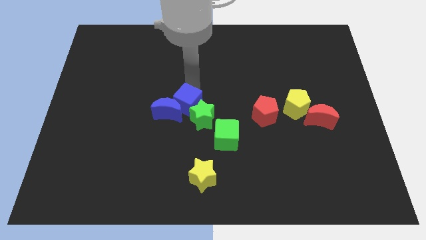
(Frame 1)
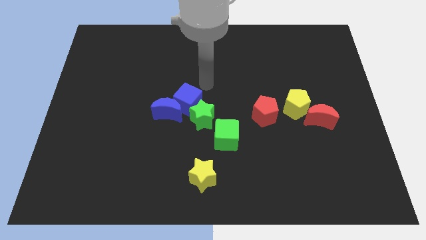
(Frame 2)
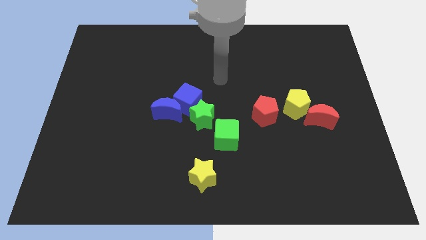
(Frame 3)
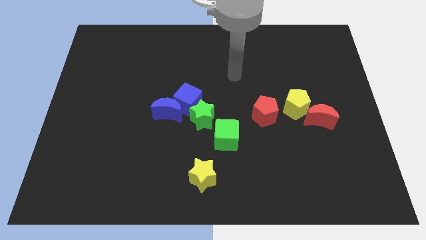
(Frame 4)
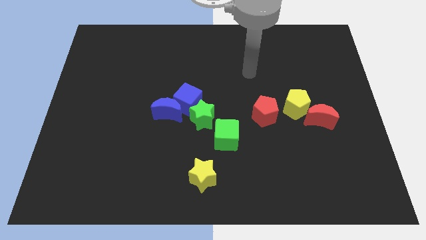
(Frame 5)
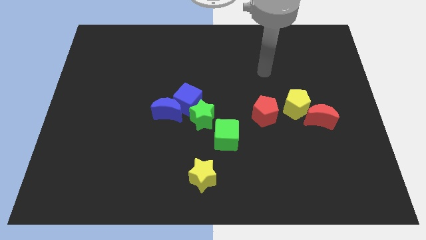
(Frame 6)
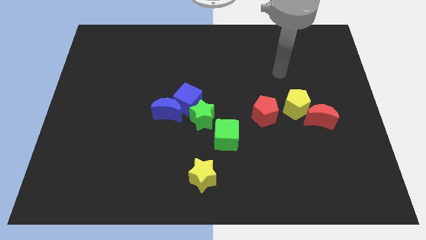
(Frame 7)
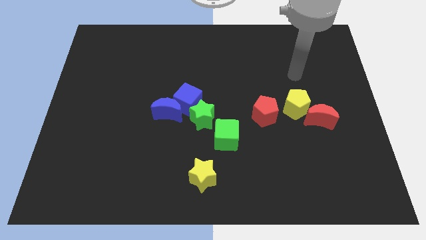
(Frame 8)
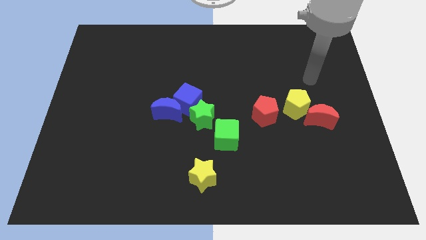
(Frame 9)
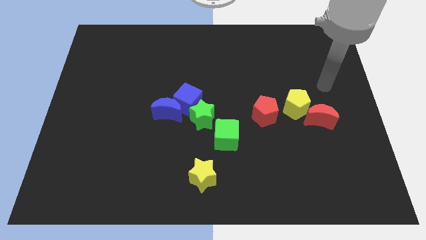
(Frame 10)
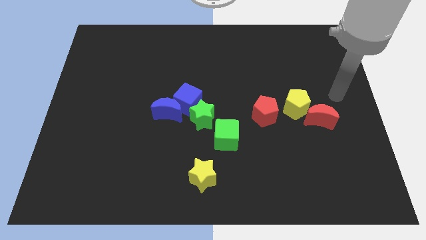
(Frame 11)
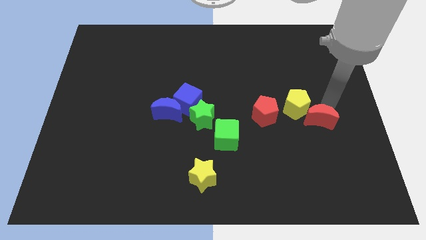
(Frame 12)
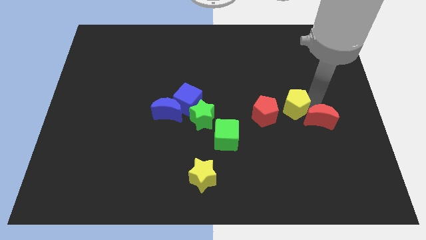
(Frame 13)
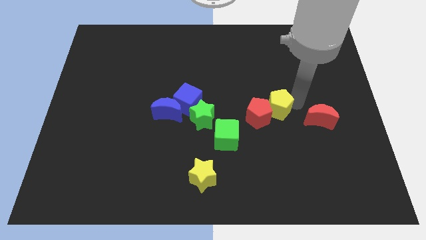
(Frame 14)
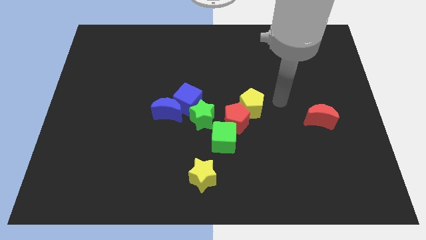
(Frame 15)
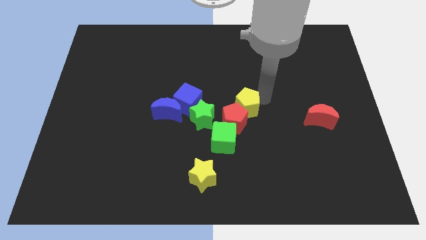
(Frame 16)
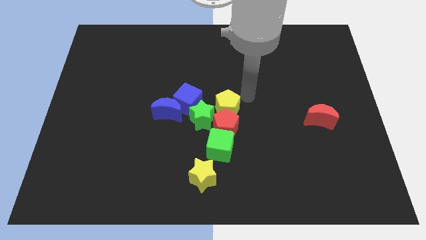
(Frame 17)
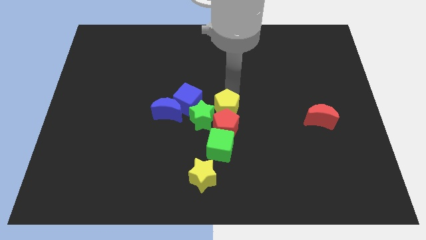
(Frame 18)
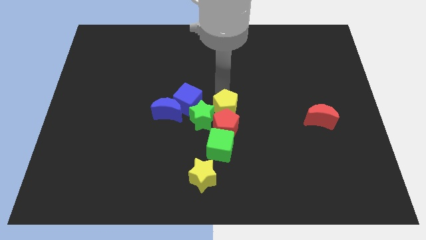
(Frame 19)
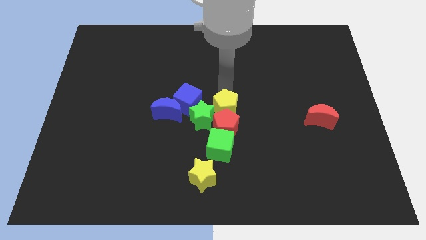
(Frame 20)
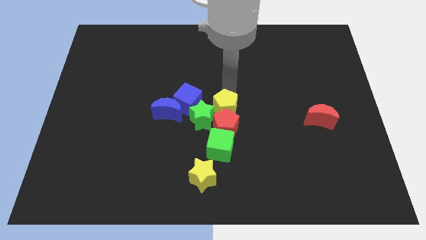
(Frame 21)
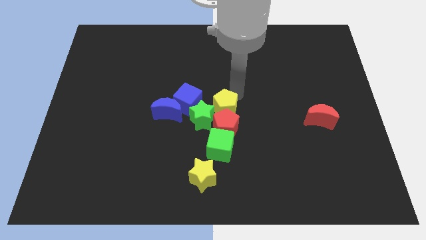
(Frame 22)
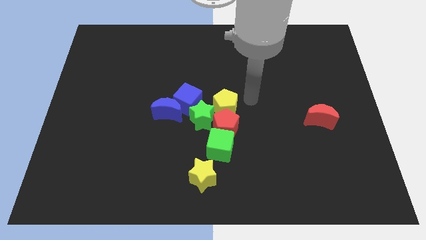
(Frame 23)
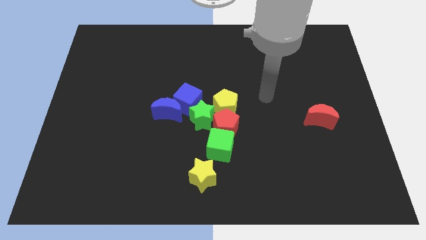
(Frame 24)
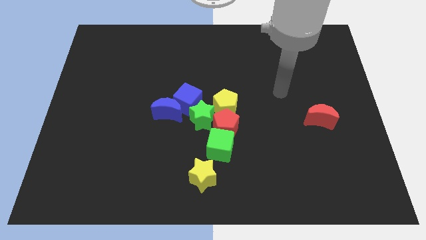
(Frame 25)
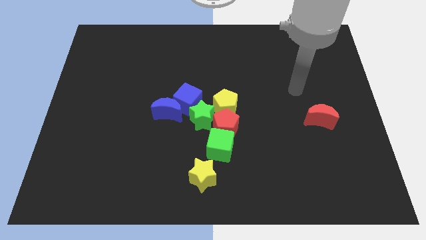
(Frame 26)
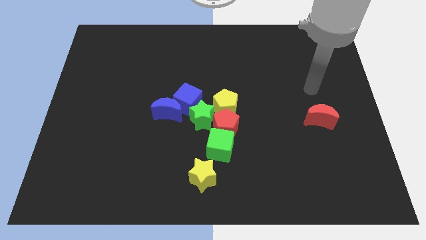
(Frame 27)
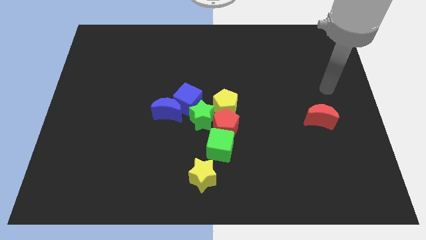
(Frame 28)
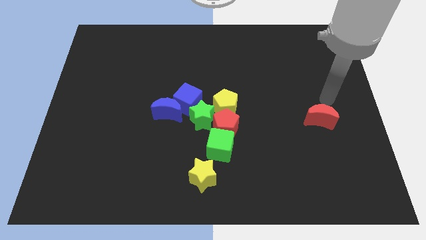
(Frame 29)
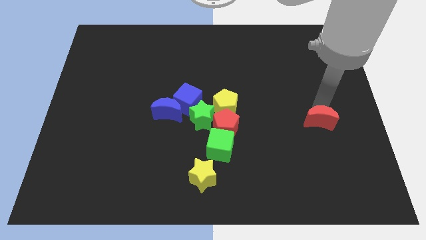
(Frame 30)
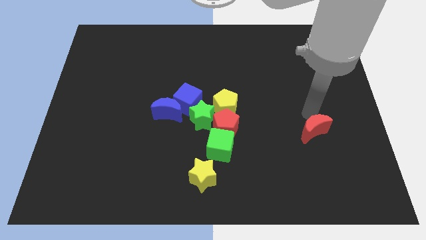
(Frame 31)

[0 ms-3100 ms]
push the green blocks red and yellow pentagon towards the center of the board

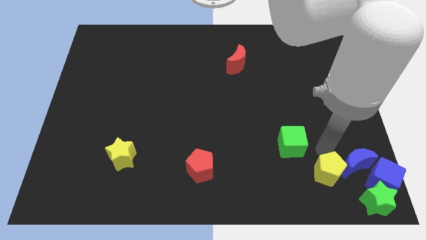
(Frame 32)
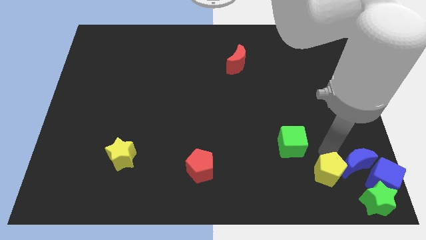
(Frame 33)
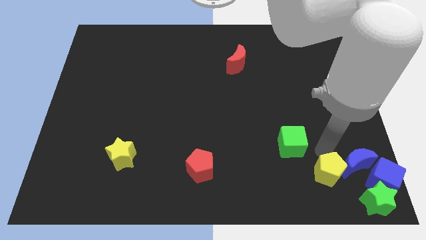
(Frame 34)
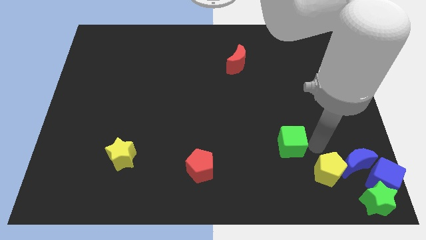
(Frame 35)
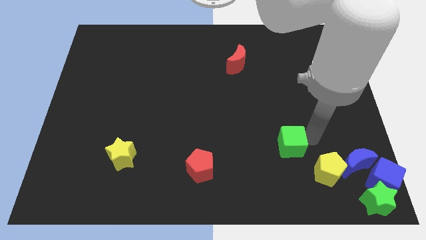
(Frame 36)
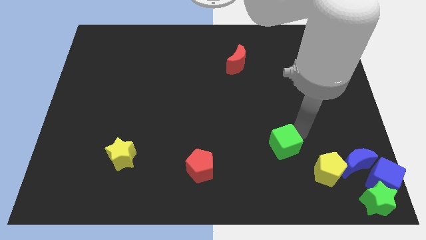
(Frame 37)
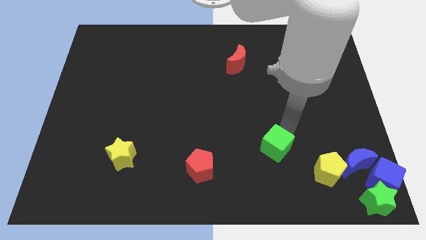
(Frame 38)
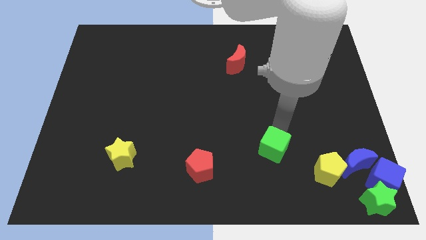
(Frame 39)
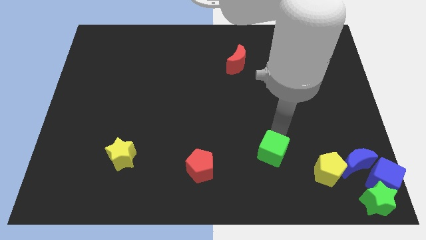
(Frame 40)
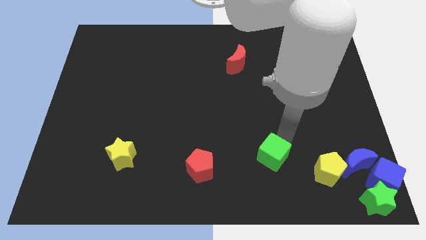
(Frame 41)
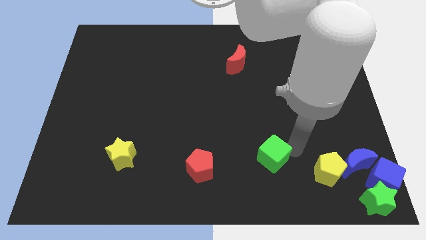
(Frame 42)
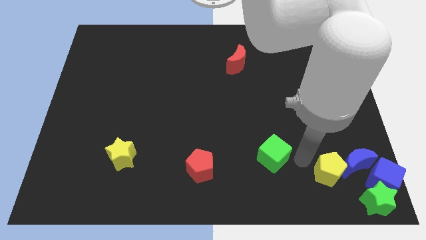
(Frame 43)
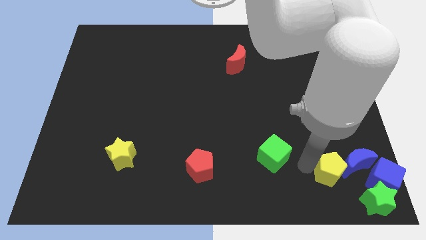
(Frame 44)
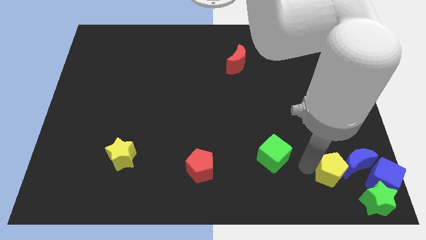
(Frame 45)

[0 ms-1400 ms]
slightly move the green cube towards the bottom center of the board

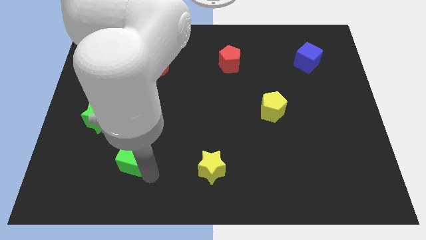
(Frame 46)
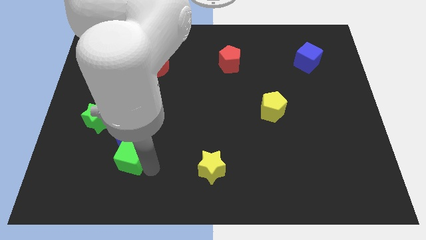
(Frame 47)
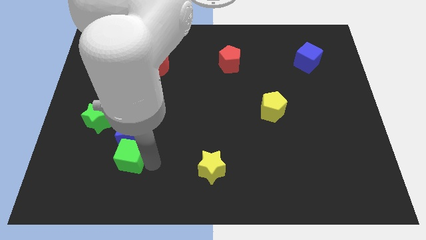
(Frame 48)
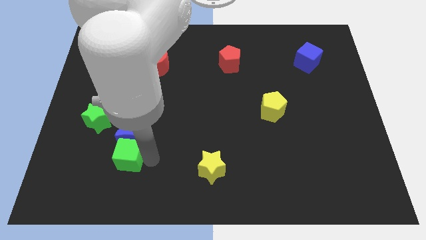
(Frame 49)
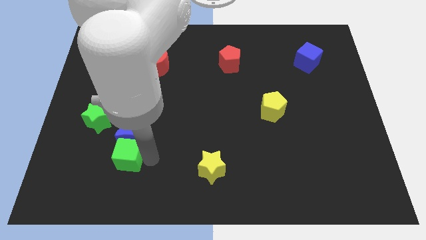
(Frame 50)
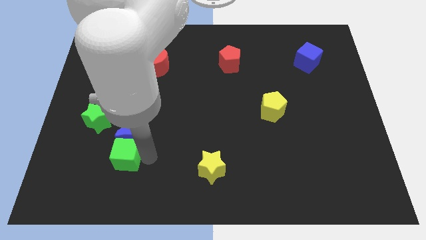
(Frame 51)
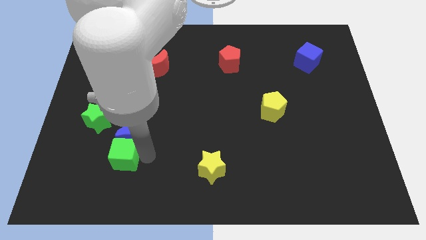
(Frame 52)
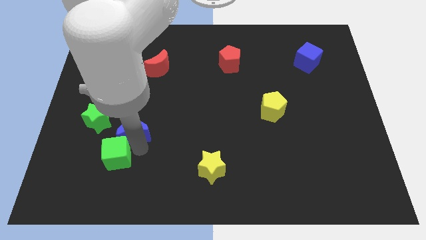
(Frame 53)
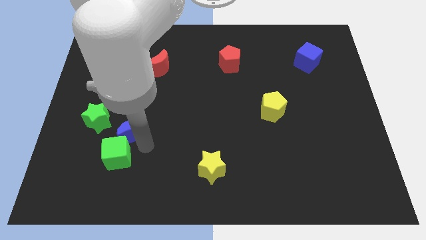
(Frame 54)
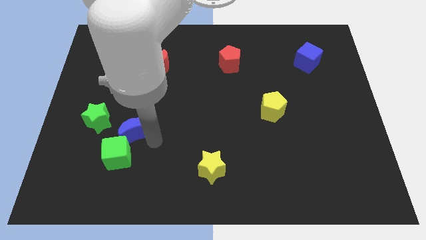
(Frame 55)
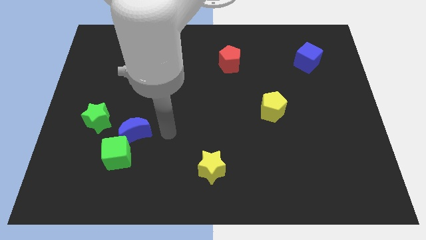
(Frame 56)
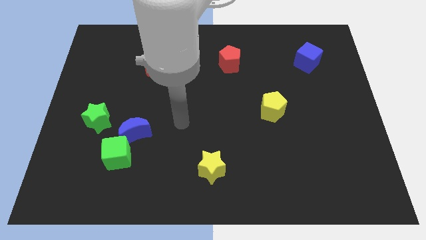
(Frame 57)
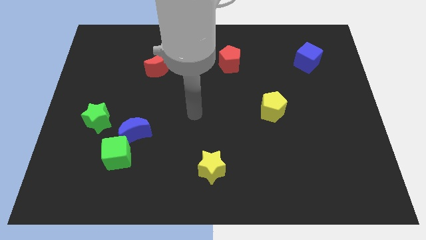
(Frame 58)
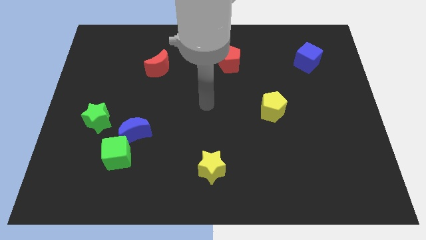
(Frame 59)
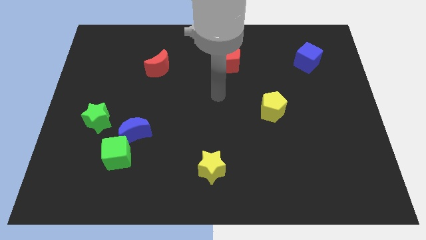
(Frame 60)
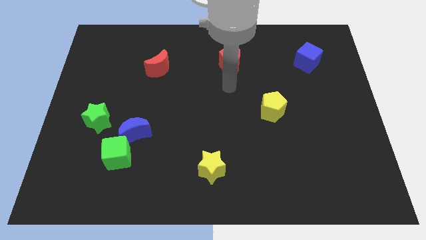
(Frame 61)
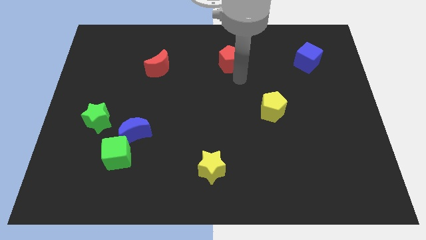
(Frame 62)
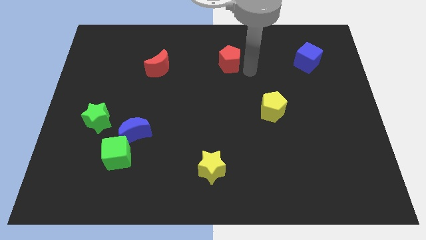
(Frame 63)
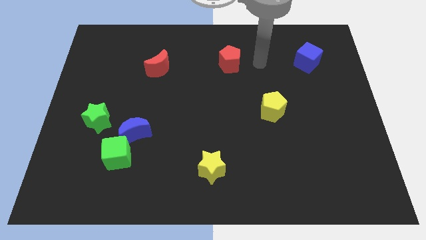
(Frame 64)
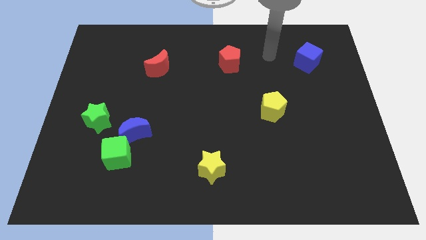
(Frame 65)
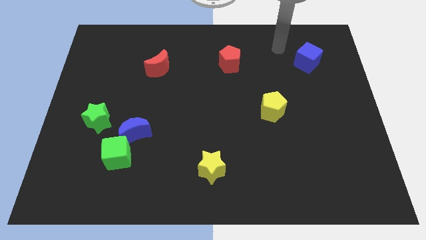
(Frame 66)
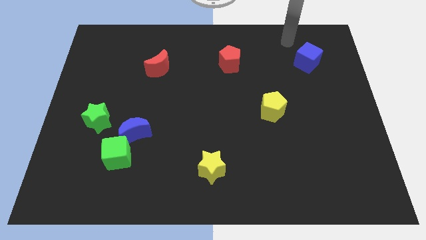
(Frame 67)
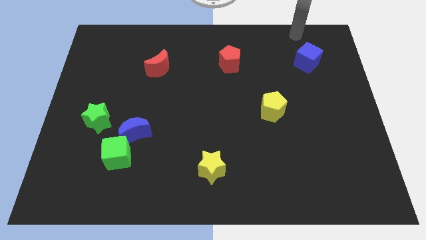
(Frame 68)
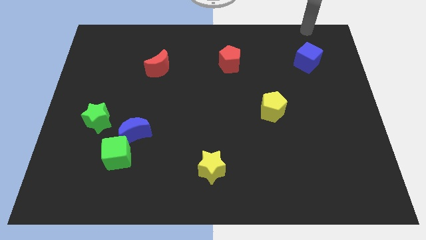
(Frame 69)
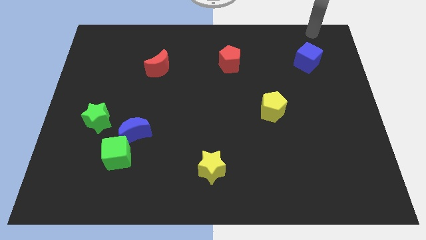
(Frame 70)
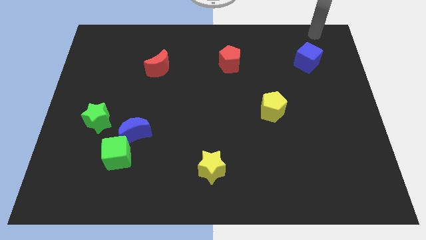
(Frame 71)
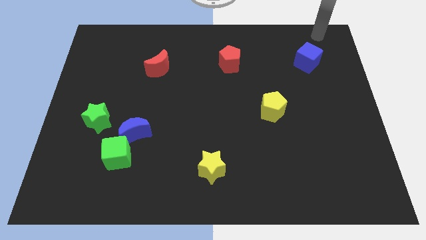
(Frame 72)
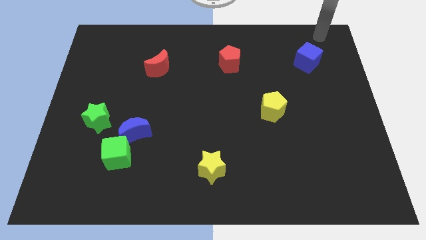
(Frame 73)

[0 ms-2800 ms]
place your hand at the top right corner

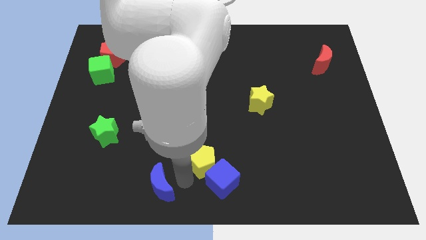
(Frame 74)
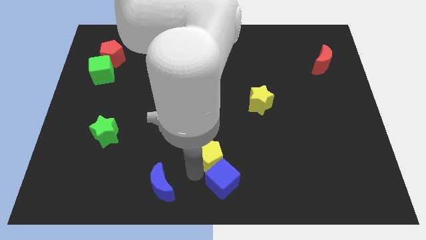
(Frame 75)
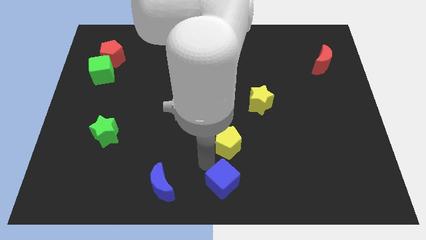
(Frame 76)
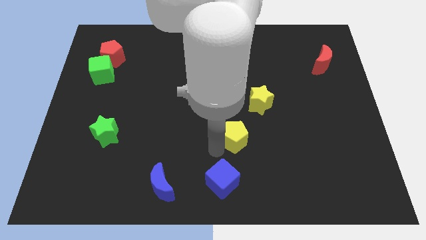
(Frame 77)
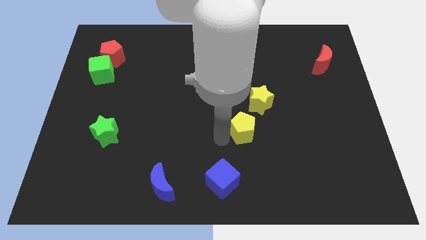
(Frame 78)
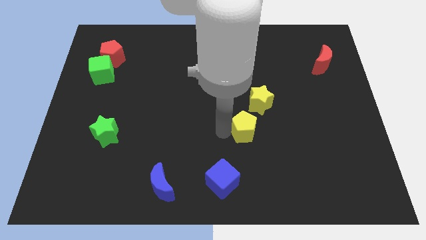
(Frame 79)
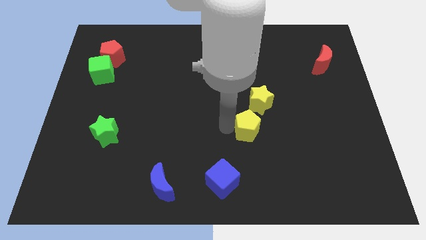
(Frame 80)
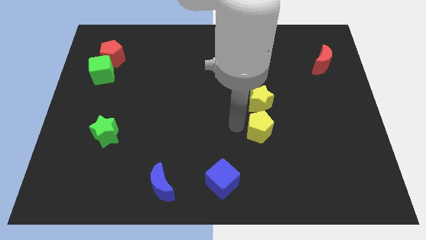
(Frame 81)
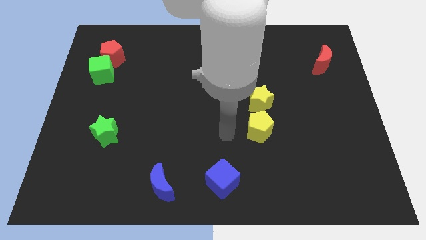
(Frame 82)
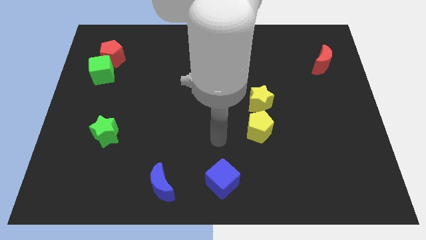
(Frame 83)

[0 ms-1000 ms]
move the yellow pentagon away from the blue cube

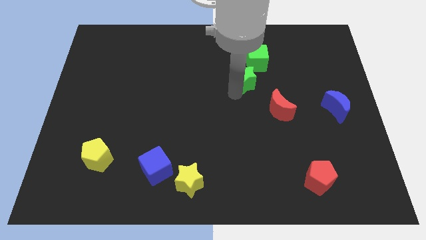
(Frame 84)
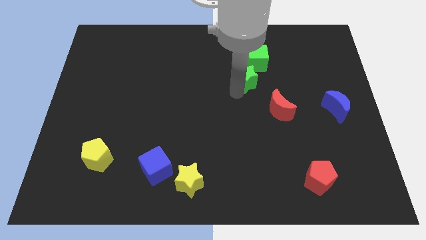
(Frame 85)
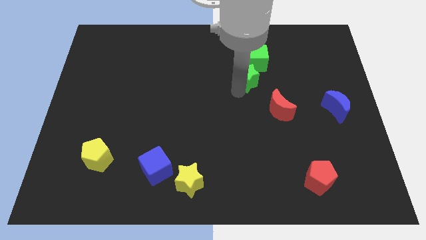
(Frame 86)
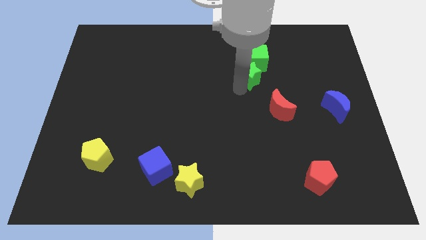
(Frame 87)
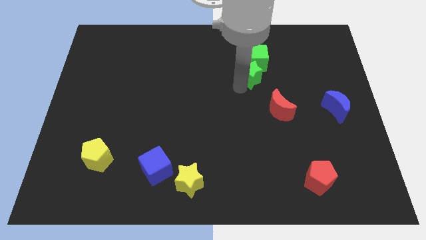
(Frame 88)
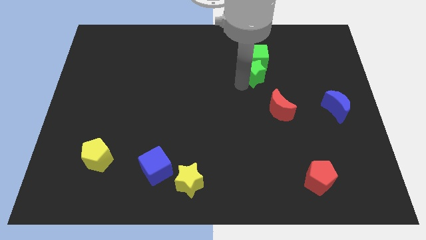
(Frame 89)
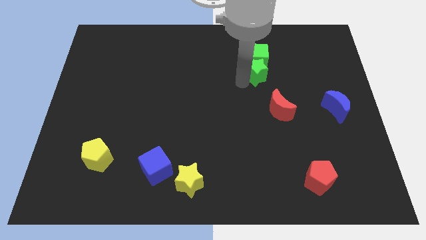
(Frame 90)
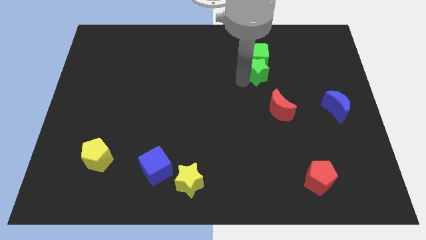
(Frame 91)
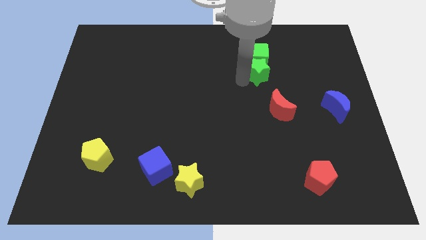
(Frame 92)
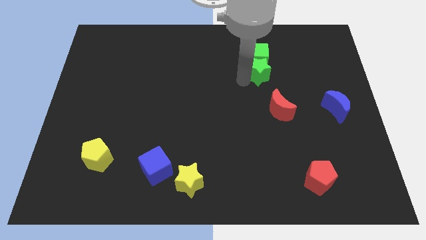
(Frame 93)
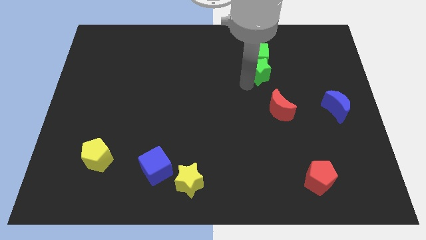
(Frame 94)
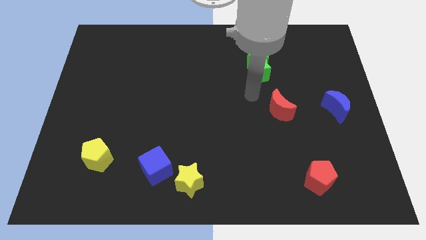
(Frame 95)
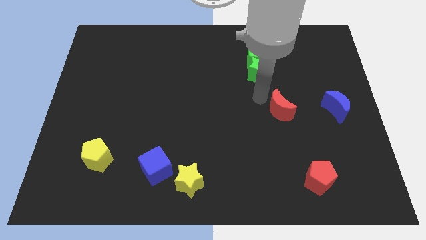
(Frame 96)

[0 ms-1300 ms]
move the green star into the green cube
